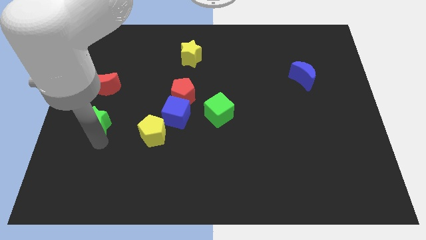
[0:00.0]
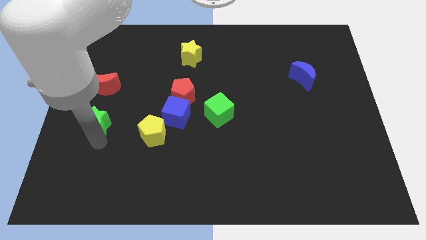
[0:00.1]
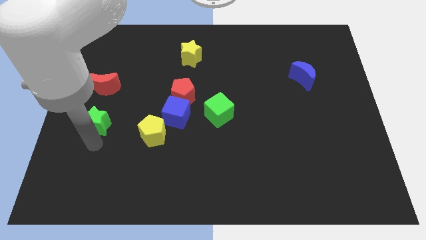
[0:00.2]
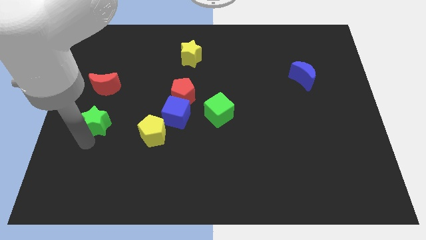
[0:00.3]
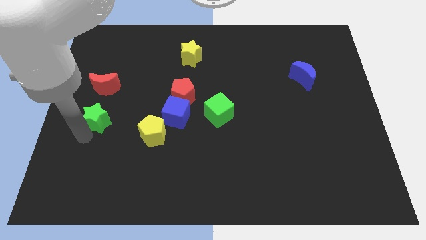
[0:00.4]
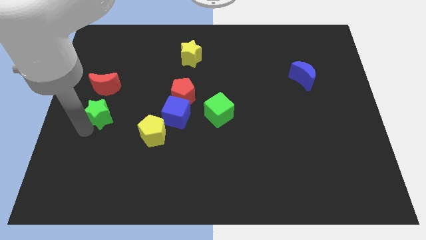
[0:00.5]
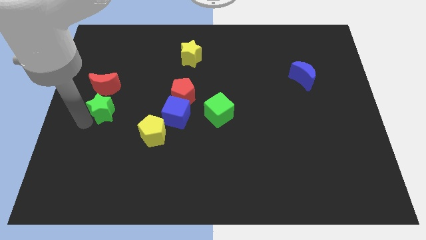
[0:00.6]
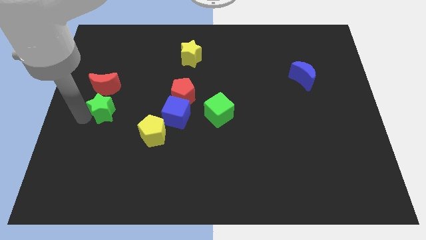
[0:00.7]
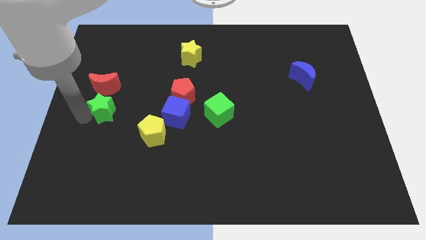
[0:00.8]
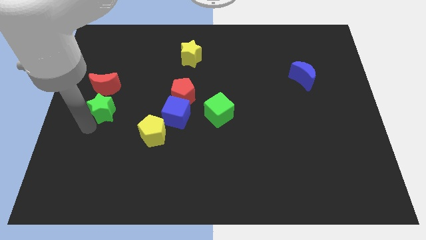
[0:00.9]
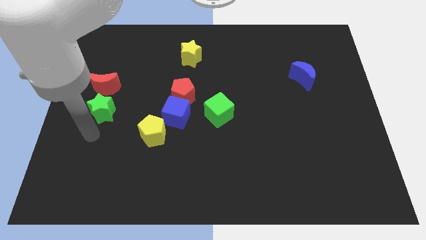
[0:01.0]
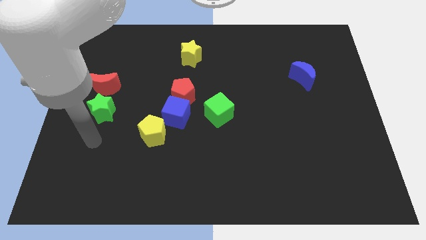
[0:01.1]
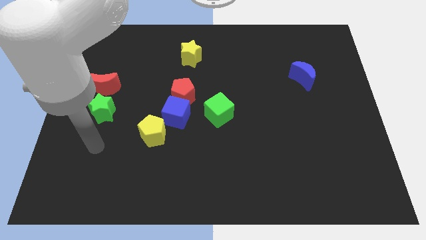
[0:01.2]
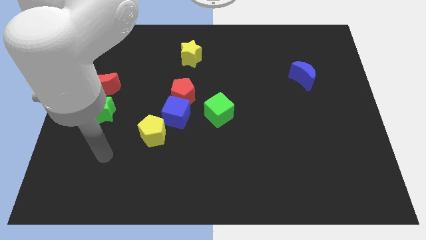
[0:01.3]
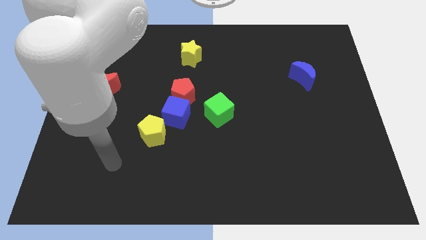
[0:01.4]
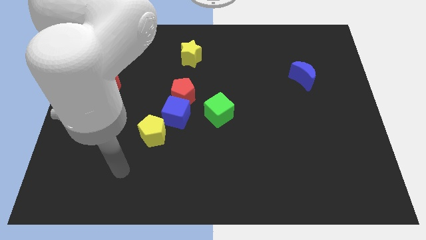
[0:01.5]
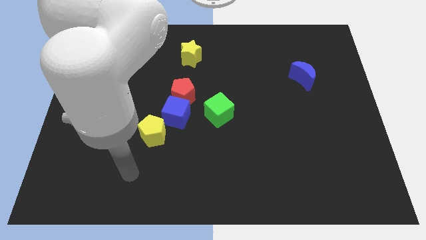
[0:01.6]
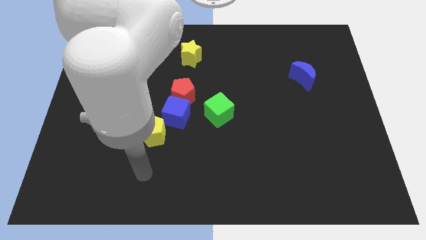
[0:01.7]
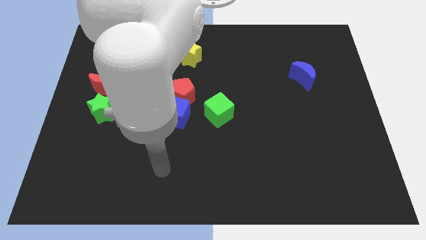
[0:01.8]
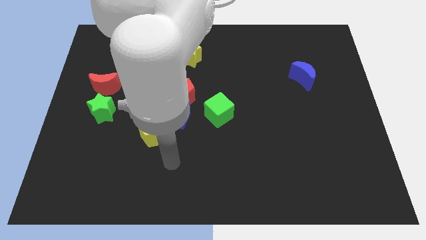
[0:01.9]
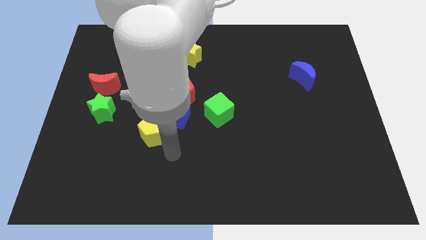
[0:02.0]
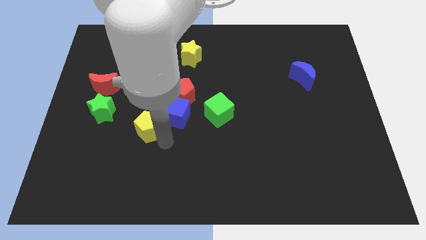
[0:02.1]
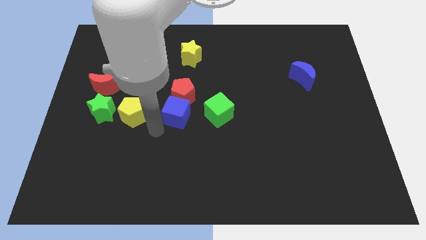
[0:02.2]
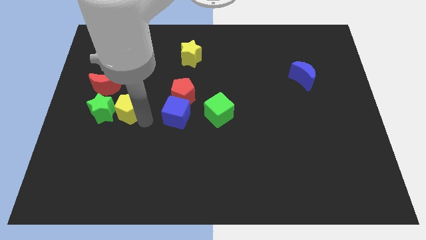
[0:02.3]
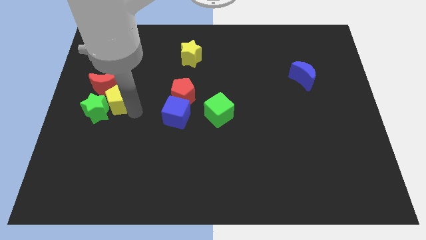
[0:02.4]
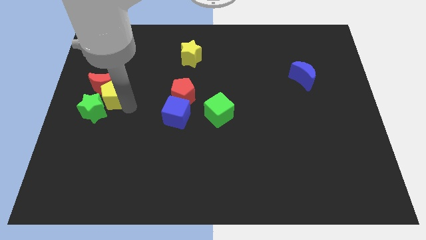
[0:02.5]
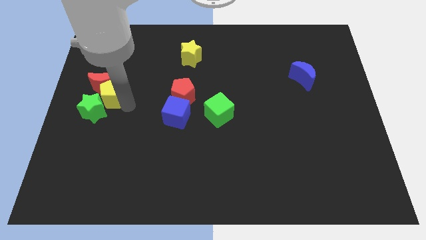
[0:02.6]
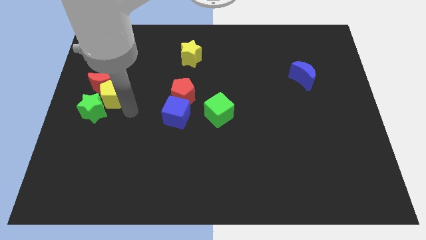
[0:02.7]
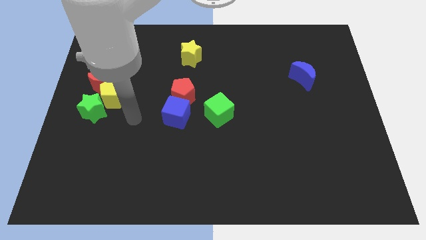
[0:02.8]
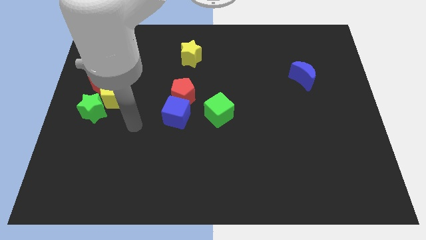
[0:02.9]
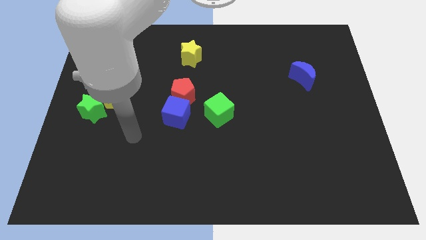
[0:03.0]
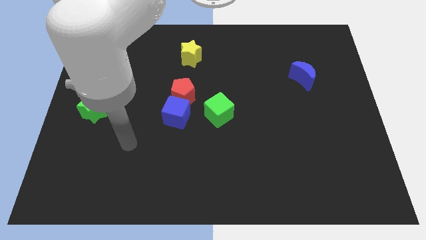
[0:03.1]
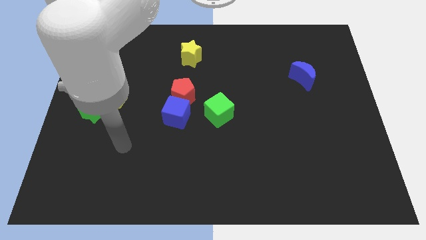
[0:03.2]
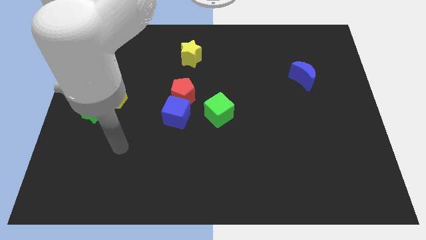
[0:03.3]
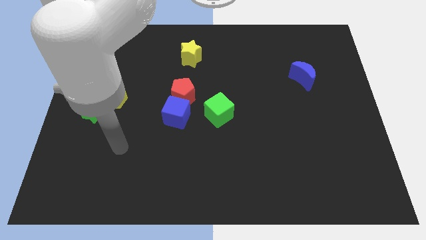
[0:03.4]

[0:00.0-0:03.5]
place the yellow pentagon towards the red crescent

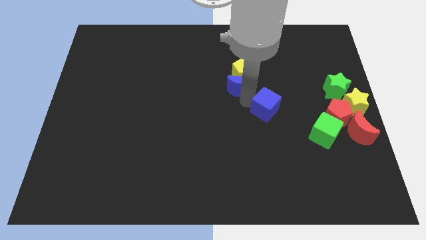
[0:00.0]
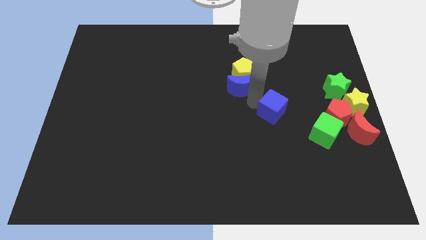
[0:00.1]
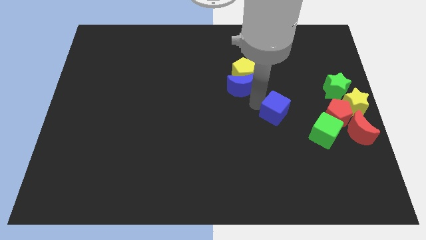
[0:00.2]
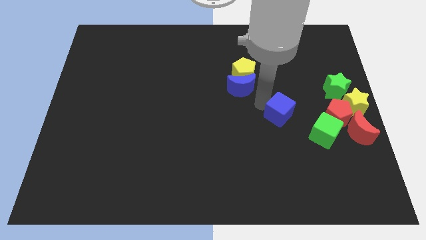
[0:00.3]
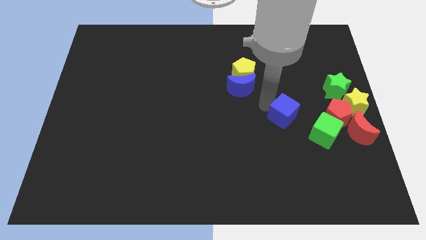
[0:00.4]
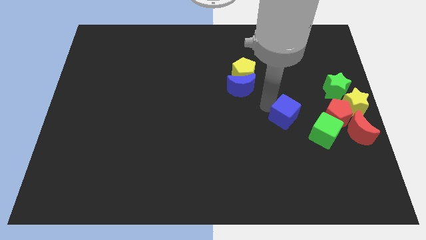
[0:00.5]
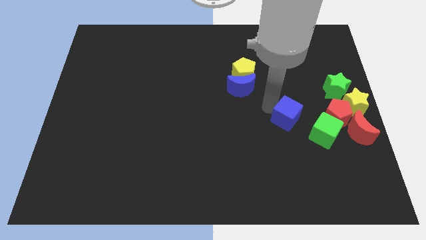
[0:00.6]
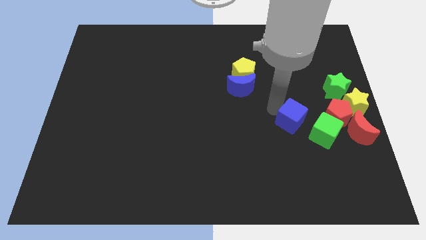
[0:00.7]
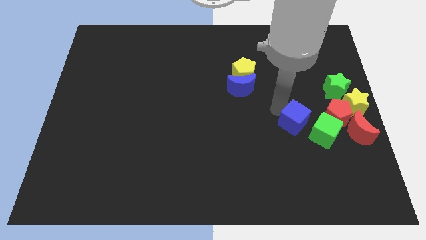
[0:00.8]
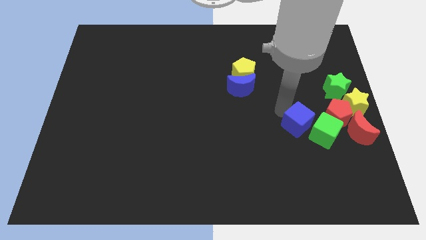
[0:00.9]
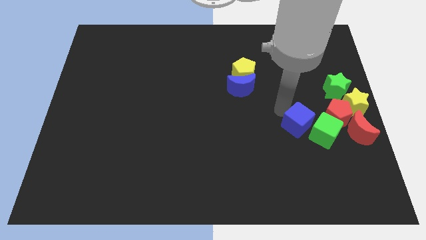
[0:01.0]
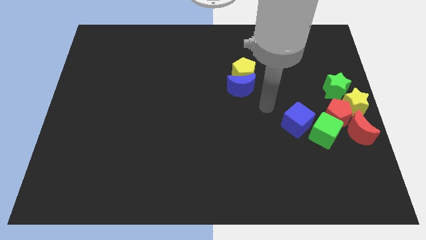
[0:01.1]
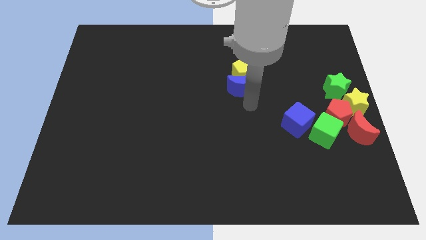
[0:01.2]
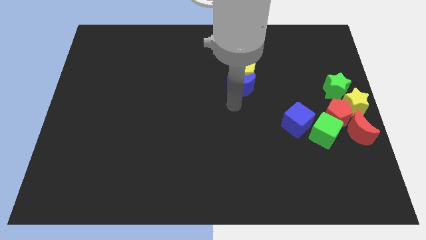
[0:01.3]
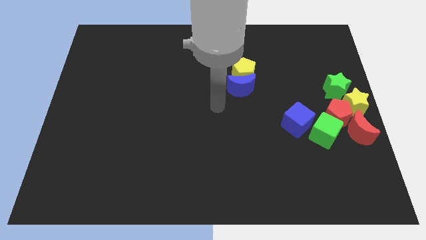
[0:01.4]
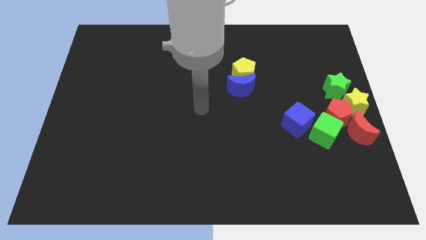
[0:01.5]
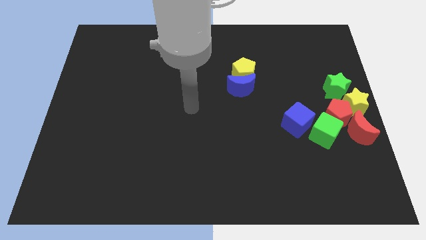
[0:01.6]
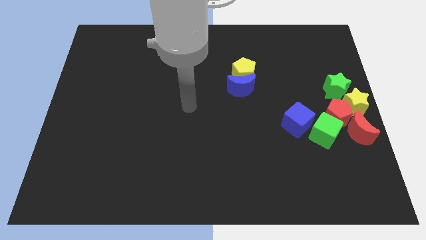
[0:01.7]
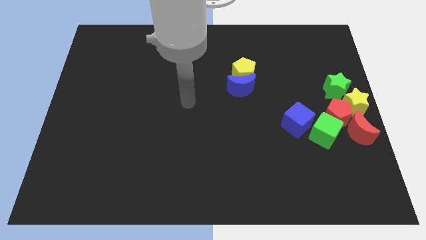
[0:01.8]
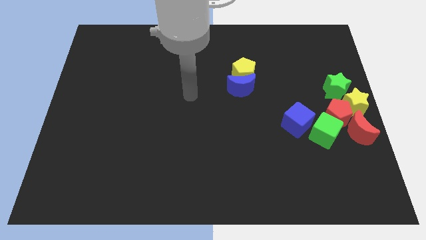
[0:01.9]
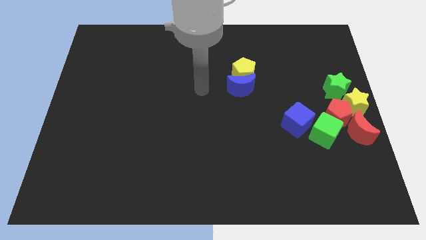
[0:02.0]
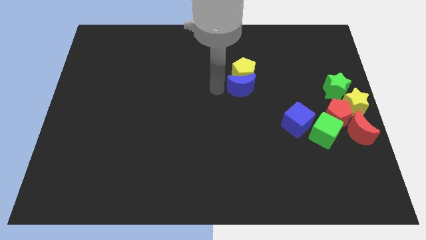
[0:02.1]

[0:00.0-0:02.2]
move the blue cube close to the green cube

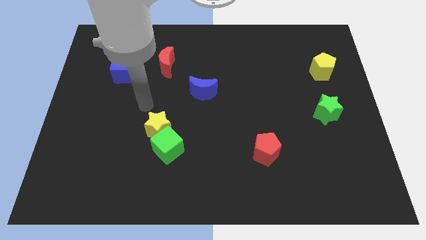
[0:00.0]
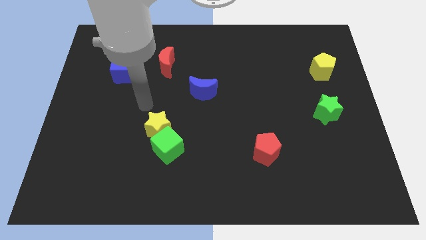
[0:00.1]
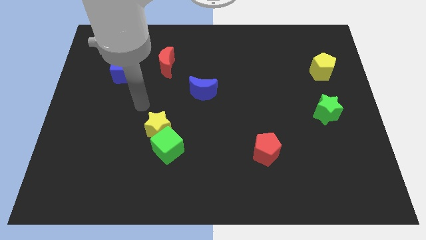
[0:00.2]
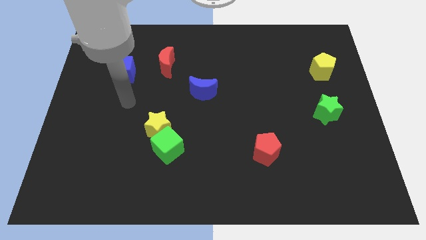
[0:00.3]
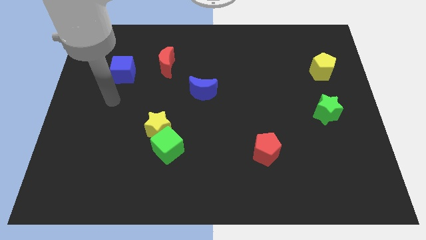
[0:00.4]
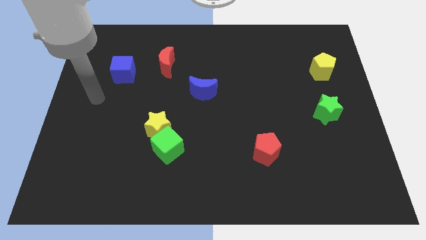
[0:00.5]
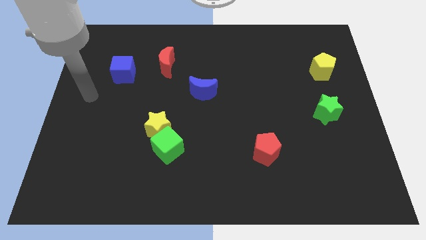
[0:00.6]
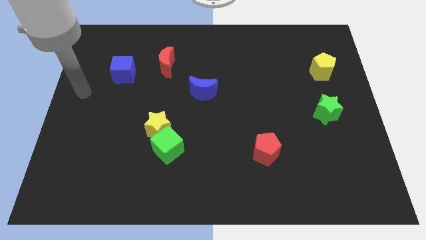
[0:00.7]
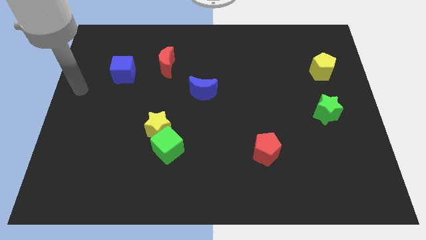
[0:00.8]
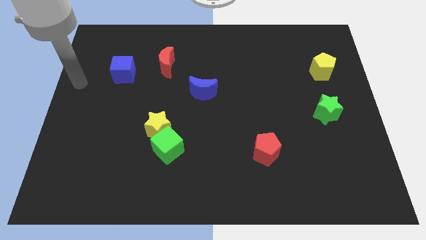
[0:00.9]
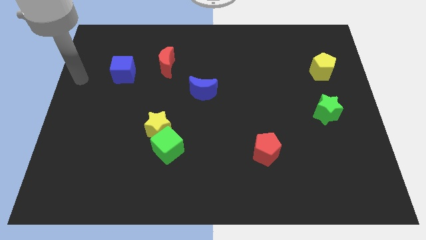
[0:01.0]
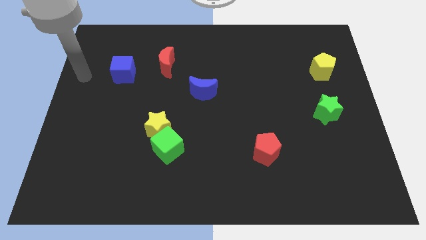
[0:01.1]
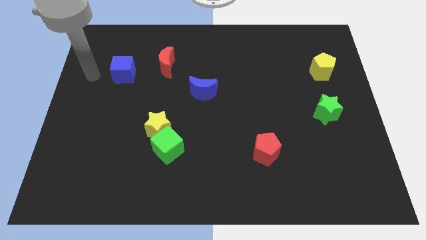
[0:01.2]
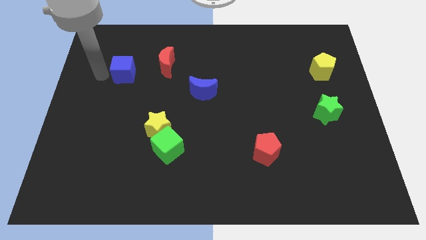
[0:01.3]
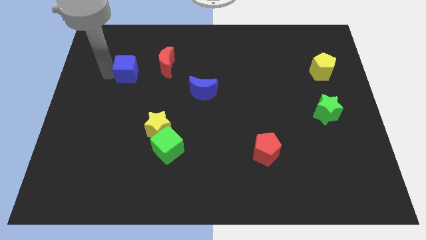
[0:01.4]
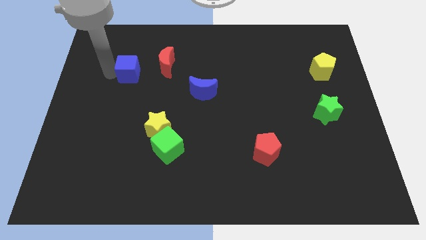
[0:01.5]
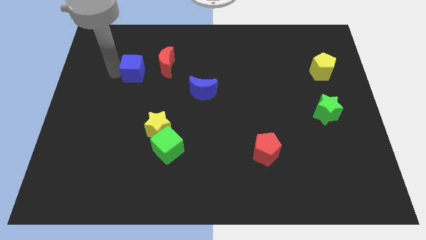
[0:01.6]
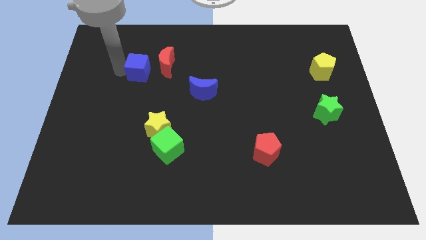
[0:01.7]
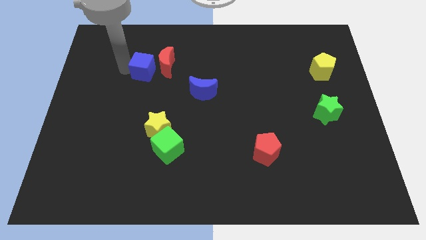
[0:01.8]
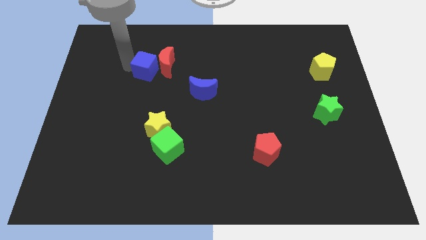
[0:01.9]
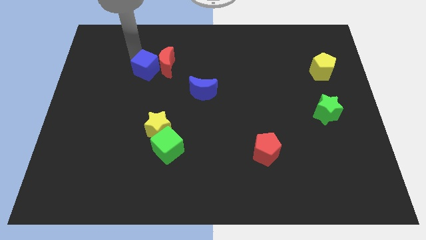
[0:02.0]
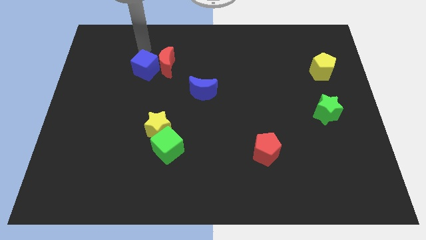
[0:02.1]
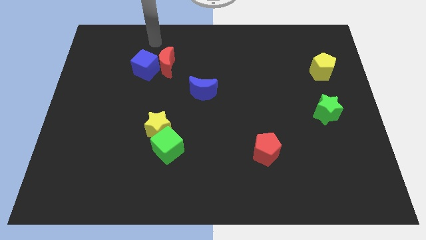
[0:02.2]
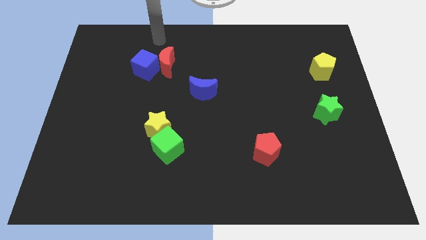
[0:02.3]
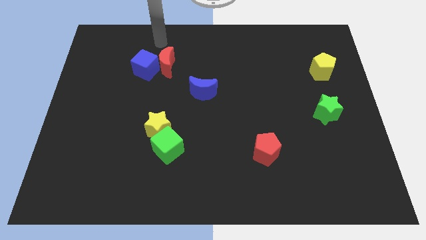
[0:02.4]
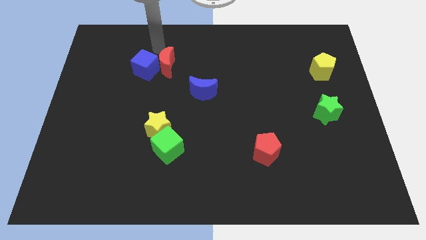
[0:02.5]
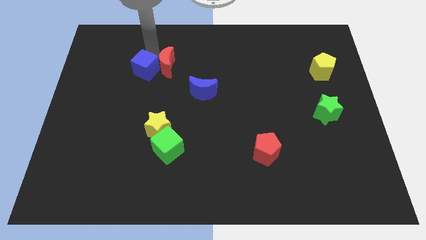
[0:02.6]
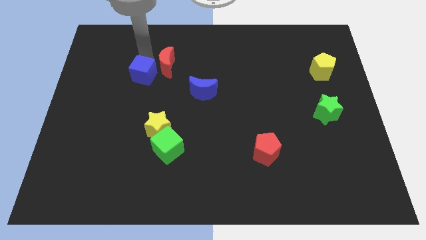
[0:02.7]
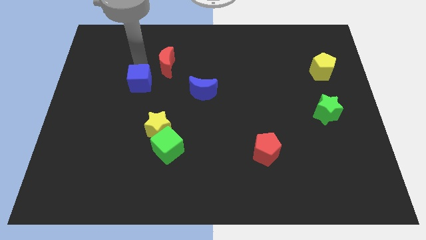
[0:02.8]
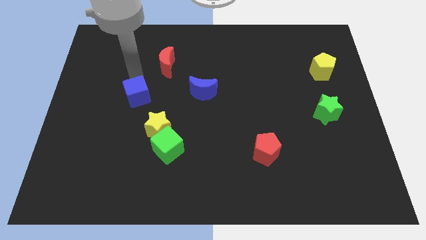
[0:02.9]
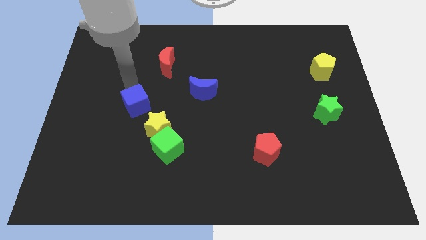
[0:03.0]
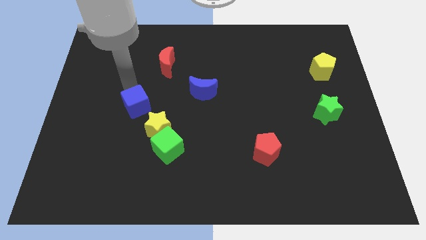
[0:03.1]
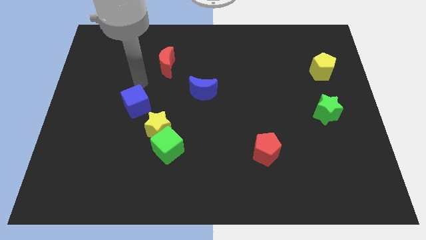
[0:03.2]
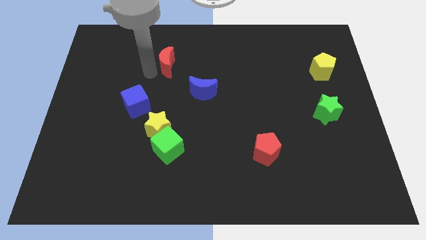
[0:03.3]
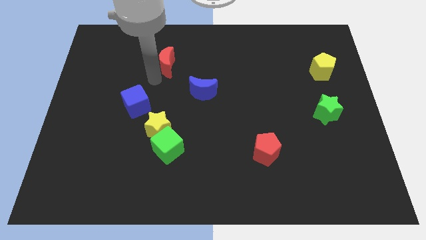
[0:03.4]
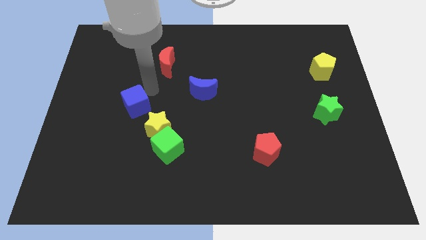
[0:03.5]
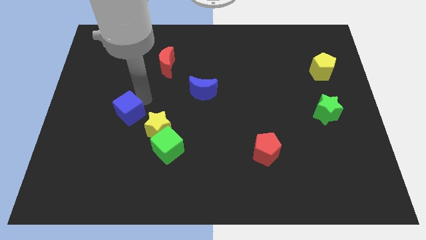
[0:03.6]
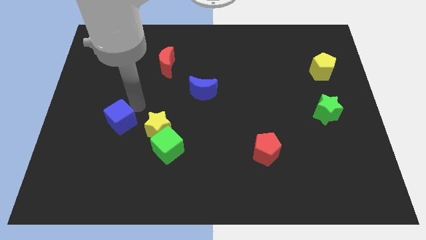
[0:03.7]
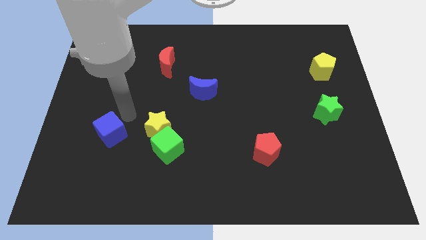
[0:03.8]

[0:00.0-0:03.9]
move the blue cube parallel left to the yellow star
